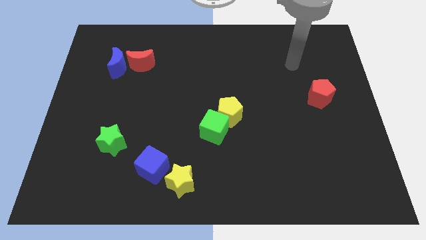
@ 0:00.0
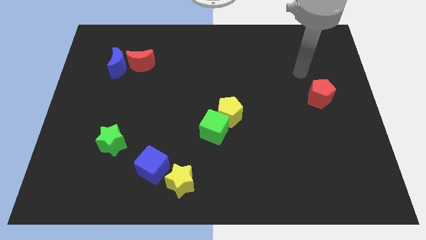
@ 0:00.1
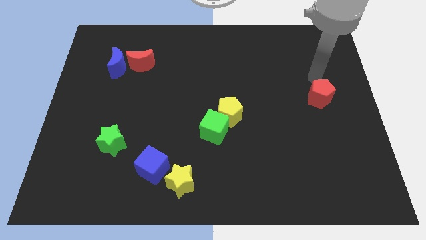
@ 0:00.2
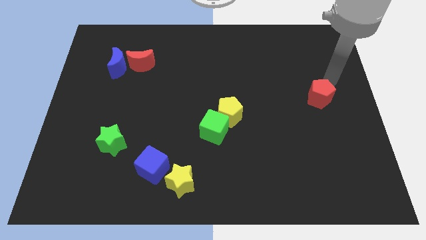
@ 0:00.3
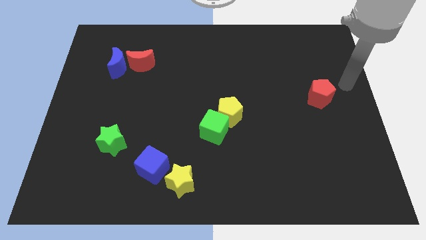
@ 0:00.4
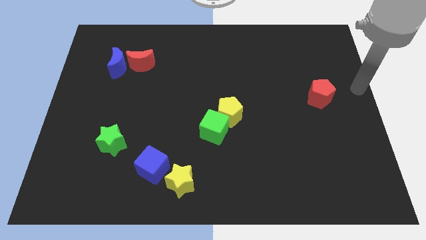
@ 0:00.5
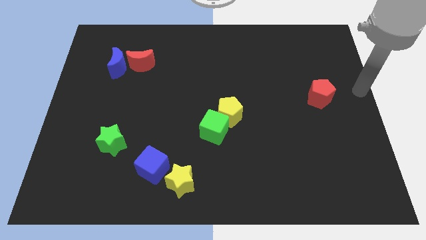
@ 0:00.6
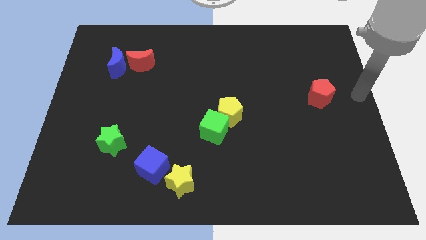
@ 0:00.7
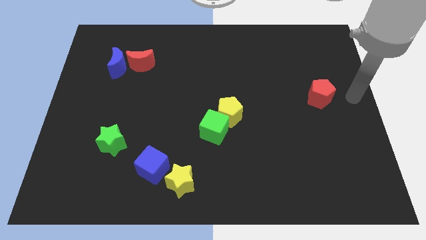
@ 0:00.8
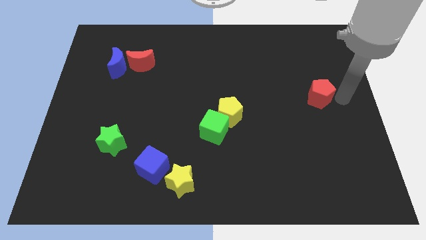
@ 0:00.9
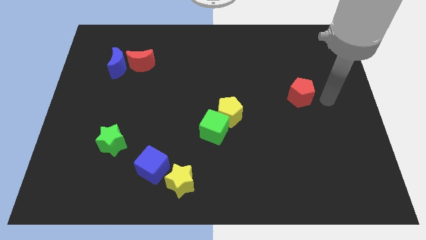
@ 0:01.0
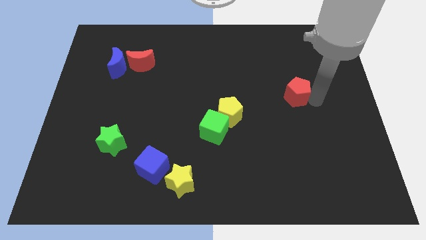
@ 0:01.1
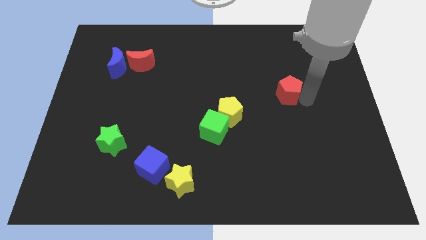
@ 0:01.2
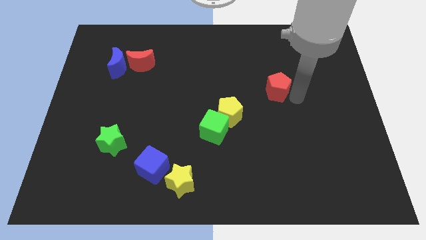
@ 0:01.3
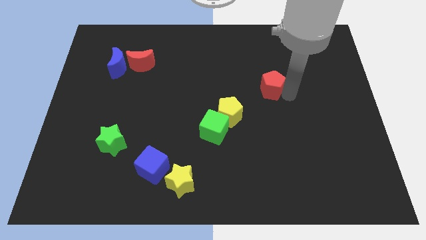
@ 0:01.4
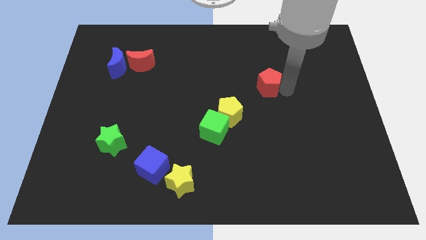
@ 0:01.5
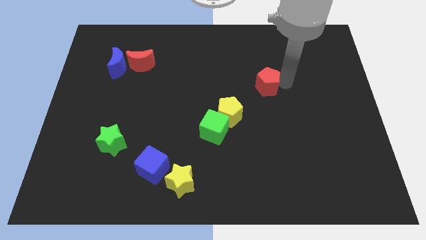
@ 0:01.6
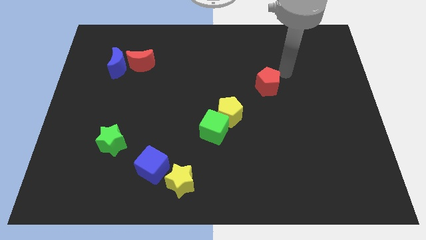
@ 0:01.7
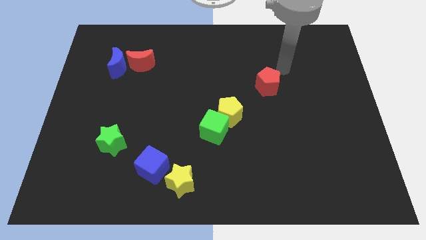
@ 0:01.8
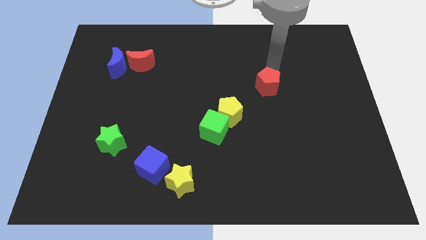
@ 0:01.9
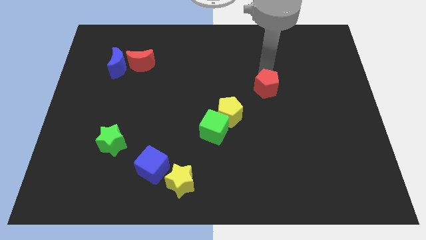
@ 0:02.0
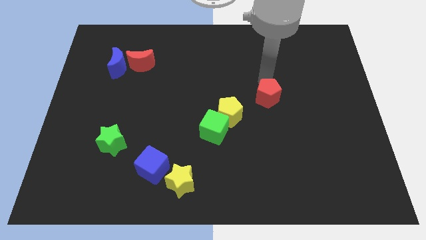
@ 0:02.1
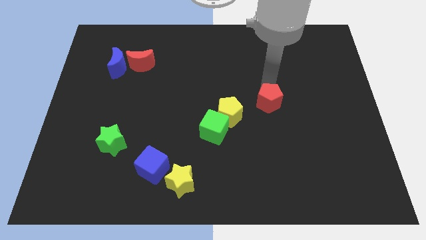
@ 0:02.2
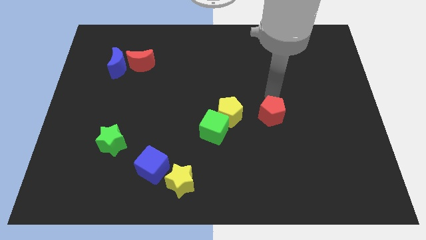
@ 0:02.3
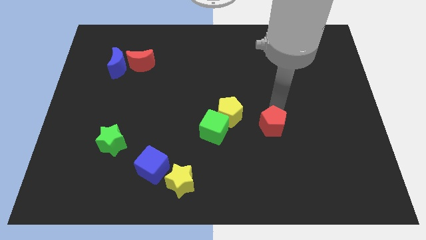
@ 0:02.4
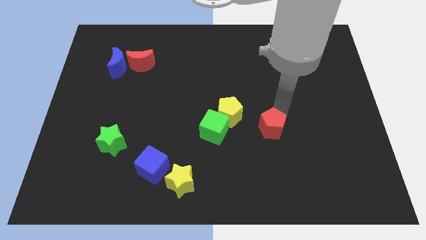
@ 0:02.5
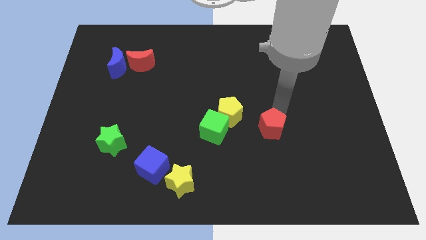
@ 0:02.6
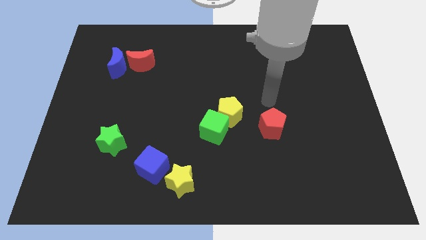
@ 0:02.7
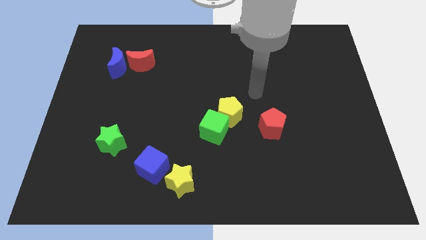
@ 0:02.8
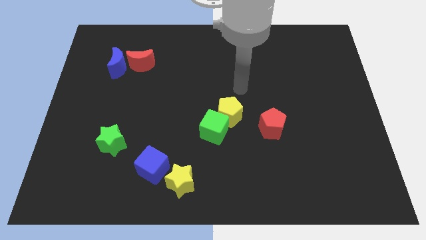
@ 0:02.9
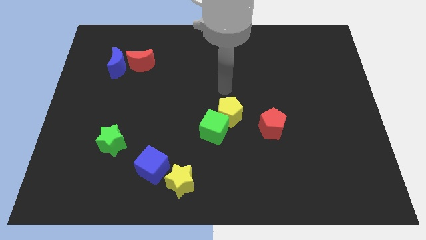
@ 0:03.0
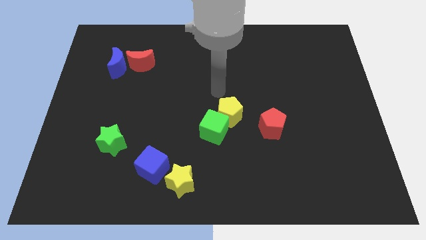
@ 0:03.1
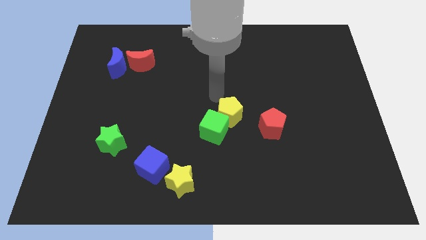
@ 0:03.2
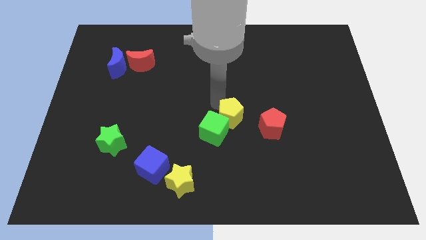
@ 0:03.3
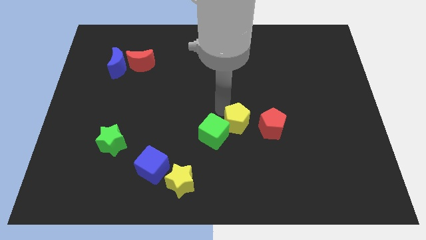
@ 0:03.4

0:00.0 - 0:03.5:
move the red pentagon to the right of green cube

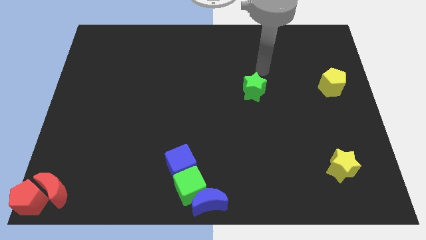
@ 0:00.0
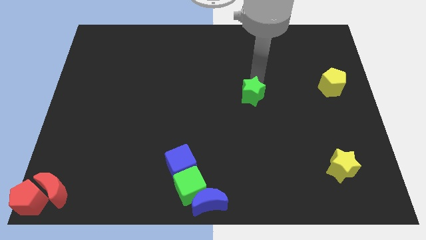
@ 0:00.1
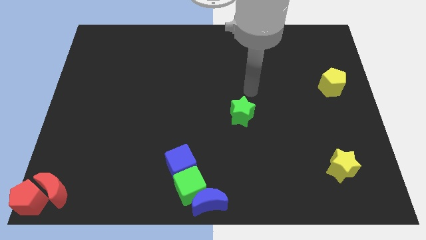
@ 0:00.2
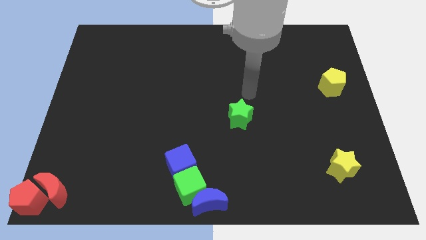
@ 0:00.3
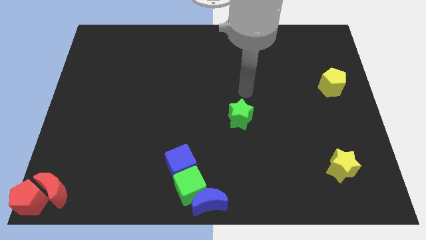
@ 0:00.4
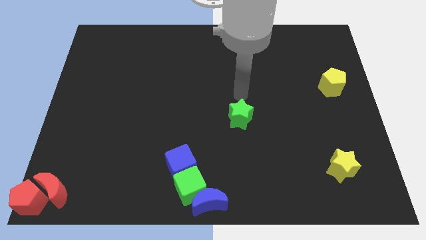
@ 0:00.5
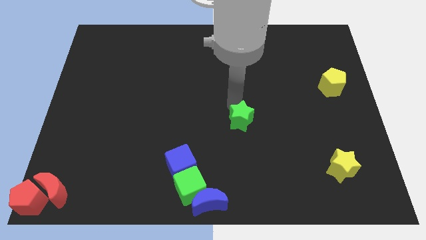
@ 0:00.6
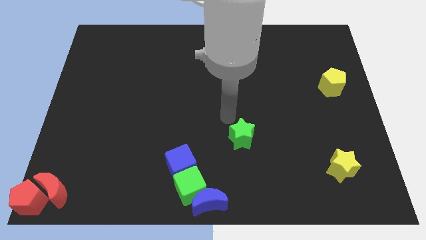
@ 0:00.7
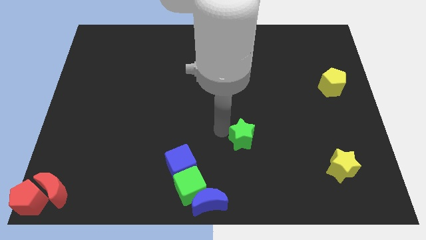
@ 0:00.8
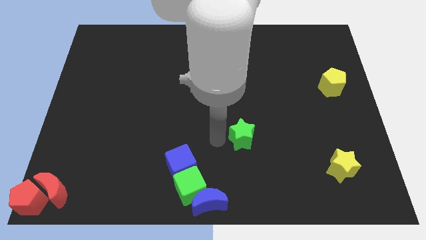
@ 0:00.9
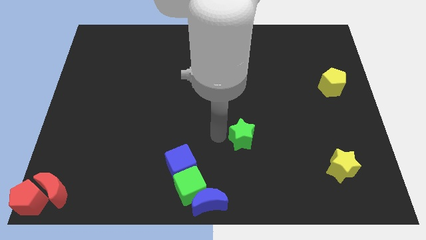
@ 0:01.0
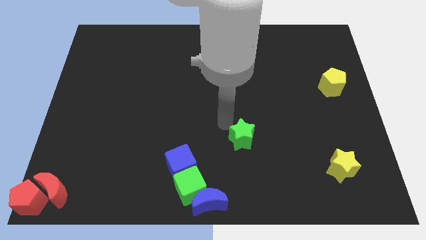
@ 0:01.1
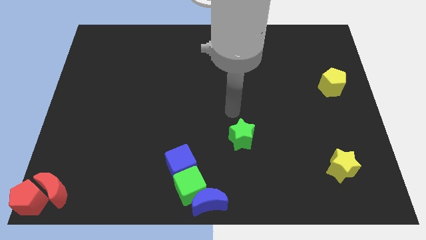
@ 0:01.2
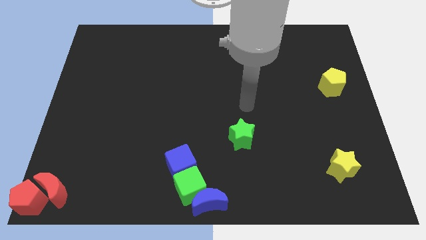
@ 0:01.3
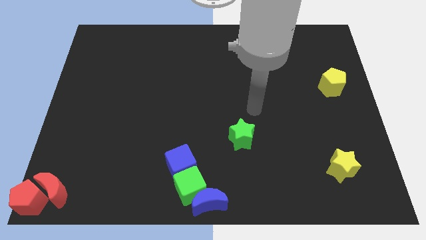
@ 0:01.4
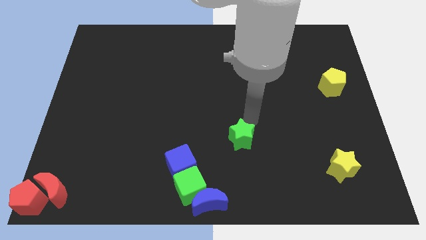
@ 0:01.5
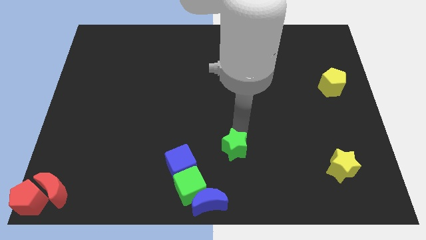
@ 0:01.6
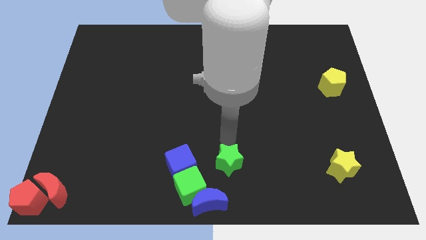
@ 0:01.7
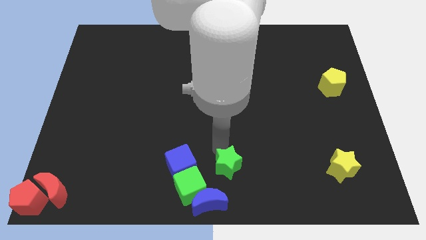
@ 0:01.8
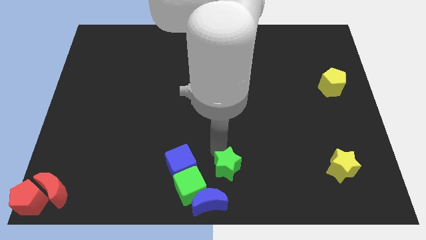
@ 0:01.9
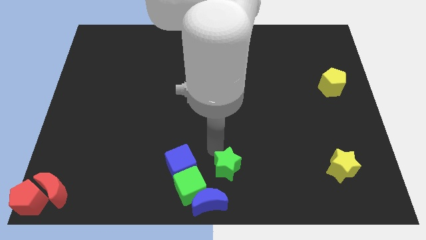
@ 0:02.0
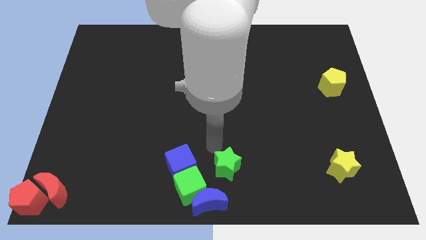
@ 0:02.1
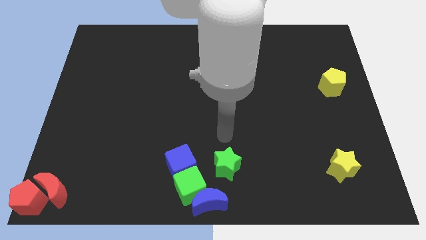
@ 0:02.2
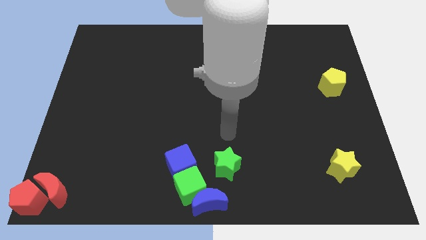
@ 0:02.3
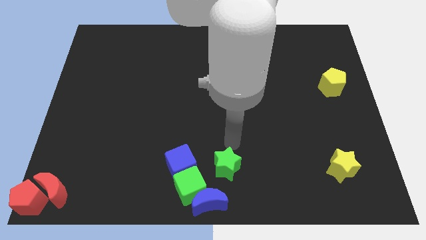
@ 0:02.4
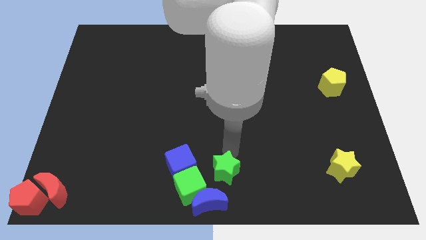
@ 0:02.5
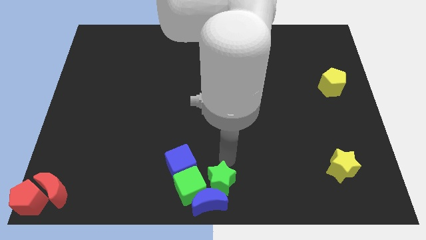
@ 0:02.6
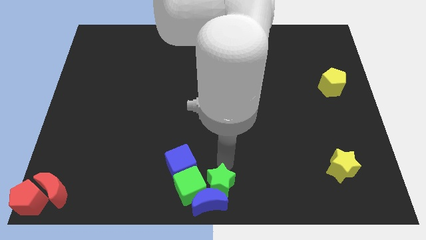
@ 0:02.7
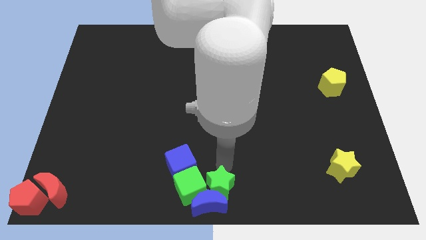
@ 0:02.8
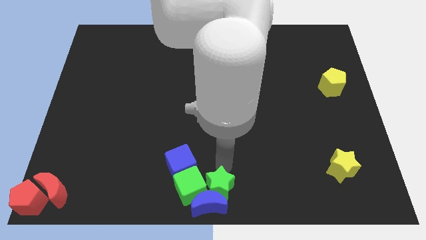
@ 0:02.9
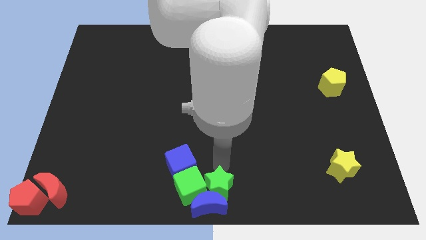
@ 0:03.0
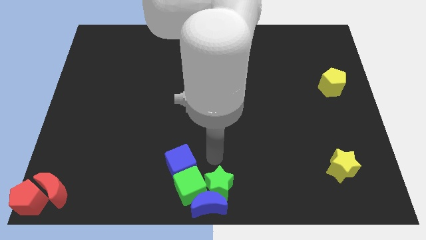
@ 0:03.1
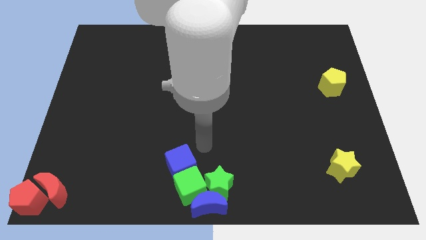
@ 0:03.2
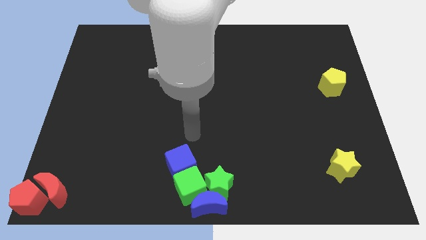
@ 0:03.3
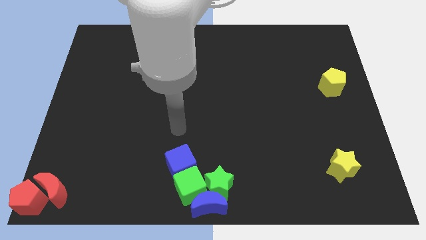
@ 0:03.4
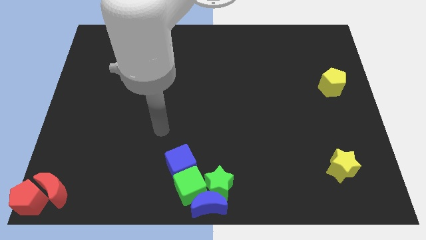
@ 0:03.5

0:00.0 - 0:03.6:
place green star to the right of green cube

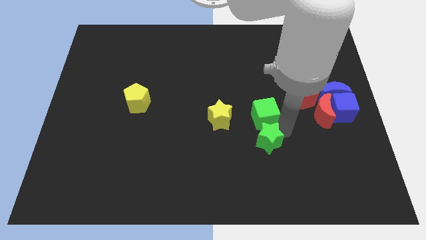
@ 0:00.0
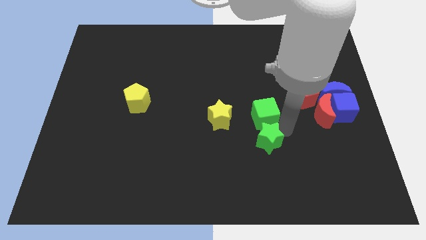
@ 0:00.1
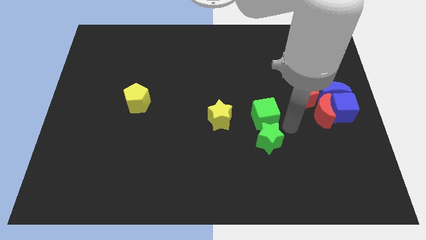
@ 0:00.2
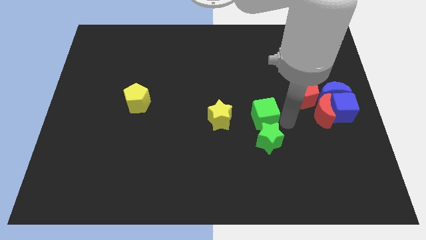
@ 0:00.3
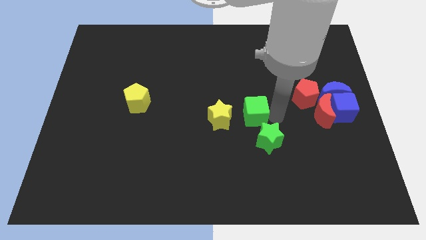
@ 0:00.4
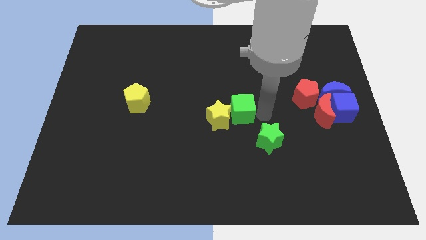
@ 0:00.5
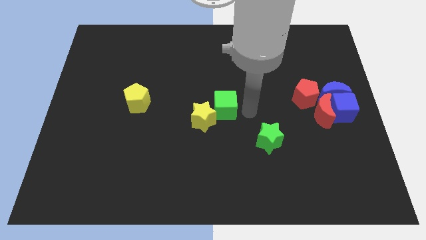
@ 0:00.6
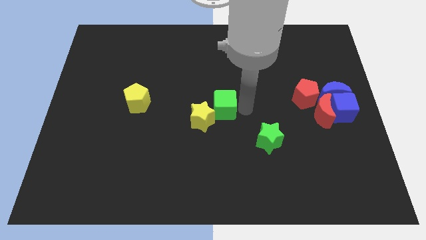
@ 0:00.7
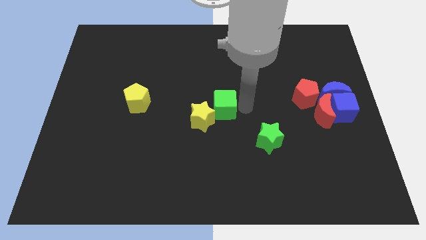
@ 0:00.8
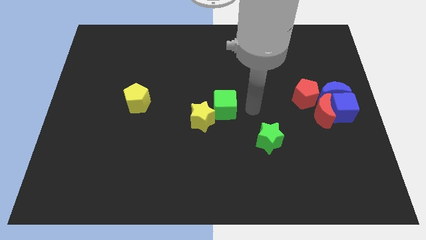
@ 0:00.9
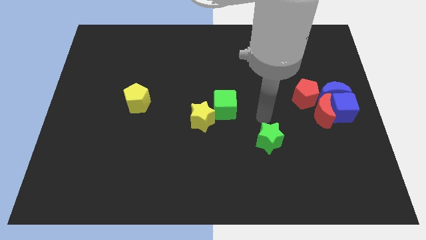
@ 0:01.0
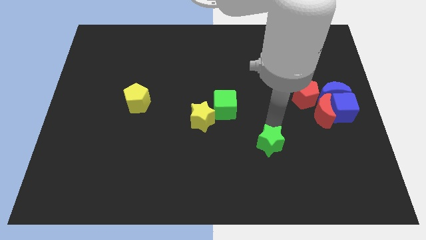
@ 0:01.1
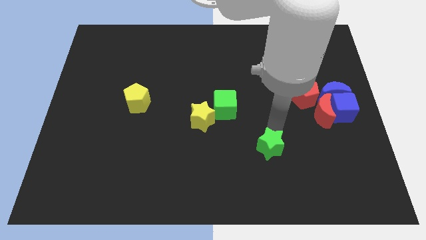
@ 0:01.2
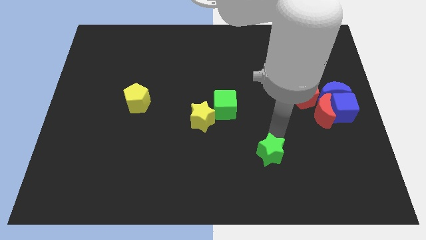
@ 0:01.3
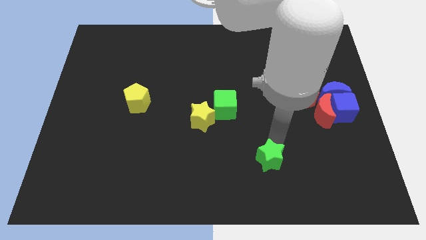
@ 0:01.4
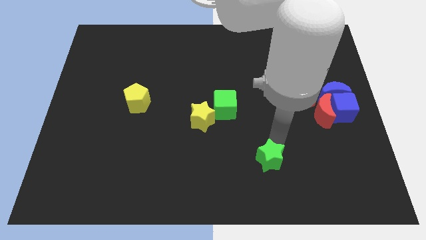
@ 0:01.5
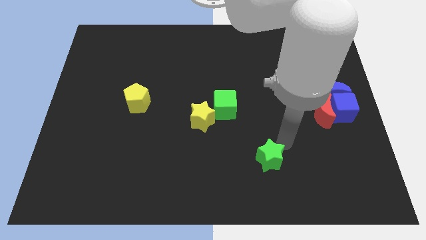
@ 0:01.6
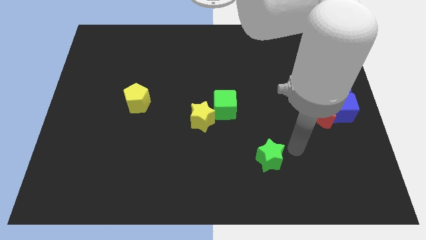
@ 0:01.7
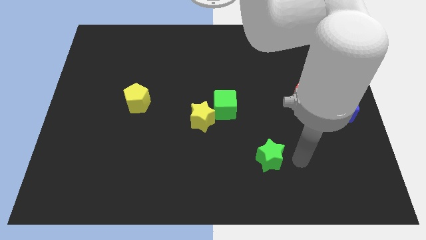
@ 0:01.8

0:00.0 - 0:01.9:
push the green cube into the yellow star at center of board
